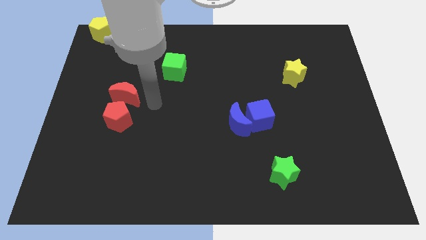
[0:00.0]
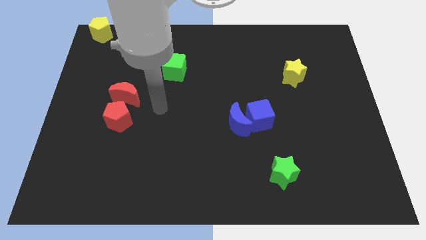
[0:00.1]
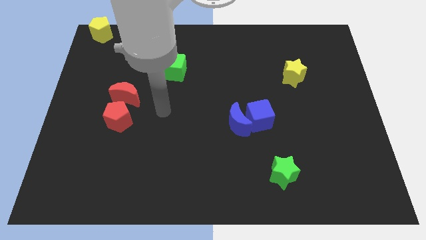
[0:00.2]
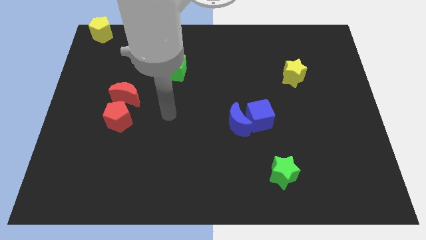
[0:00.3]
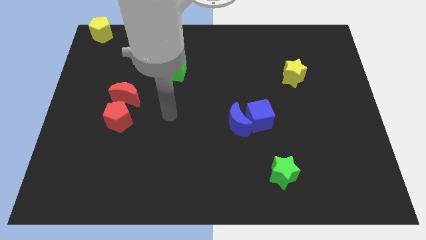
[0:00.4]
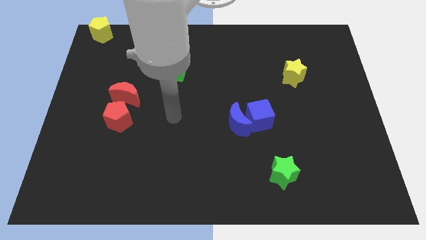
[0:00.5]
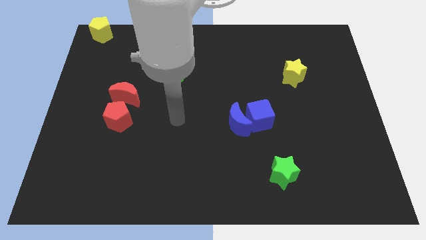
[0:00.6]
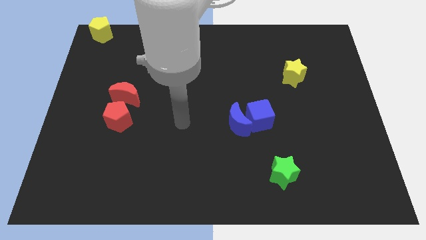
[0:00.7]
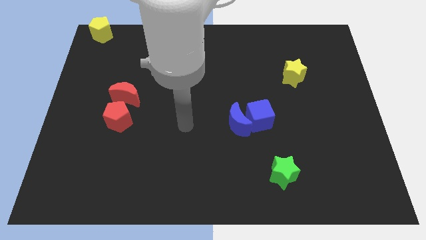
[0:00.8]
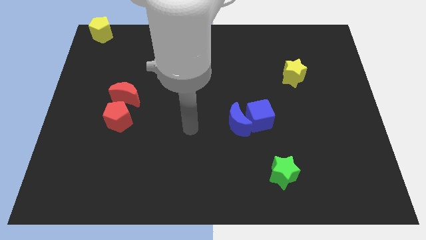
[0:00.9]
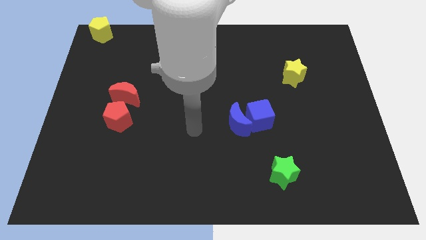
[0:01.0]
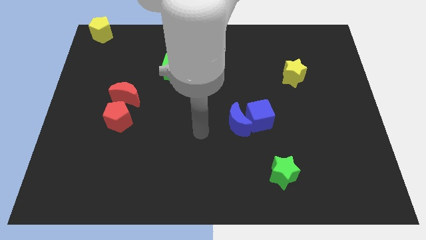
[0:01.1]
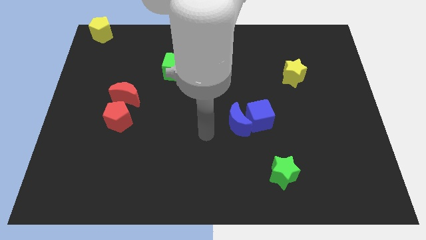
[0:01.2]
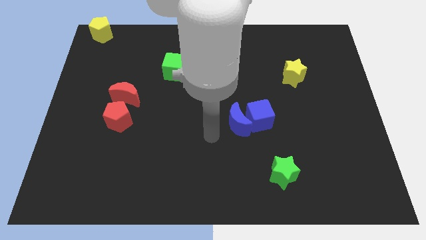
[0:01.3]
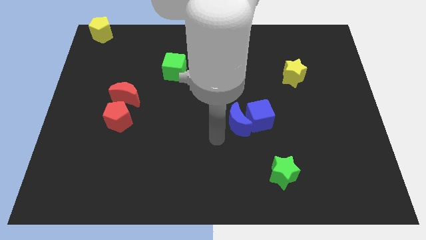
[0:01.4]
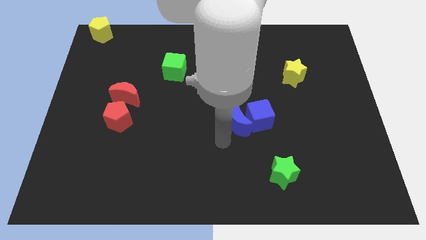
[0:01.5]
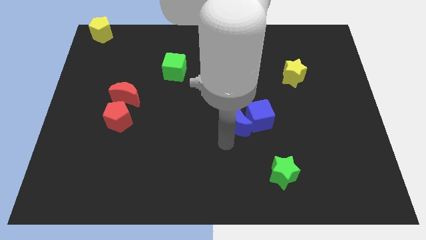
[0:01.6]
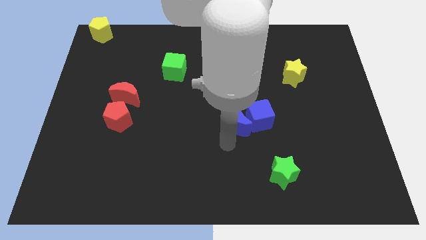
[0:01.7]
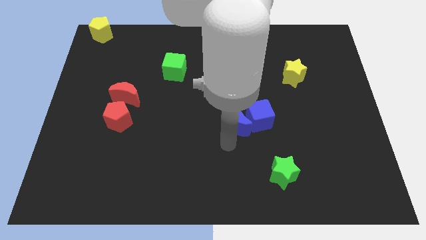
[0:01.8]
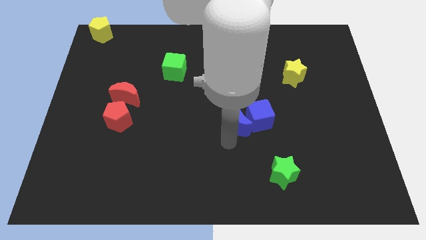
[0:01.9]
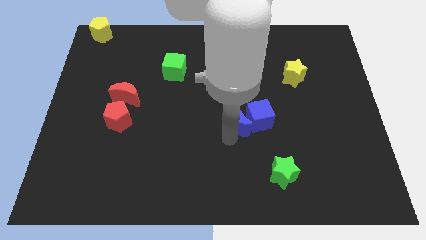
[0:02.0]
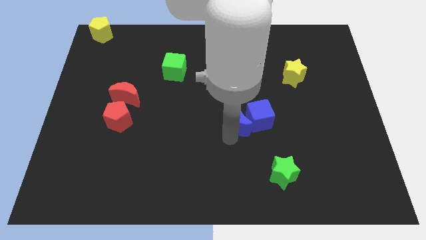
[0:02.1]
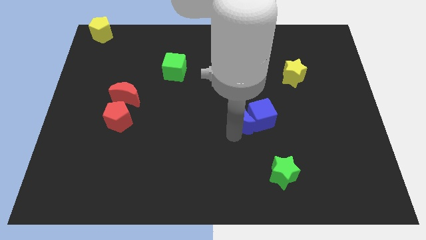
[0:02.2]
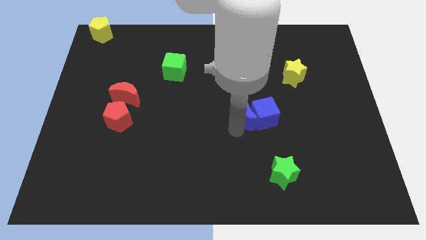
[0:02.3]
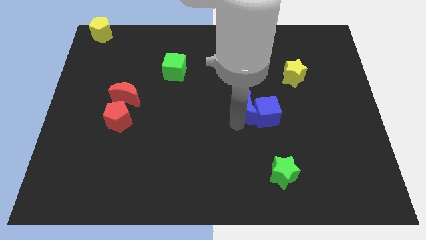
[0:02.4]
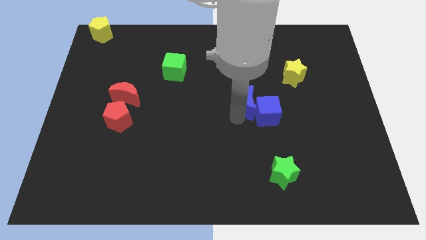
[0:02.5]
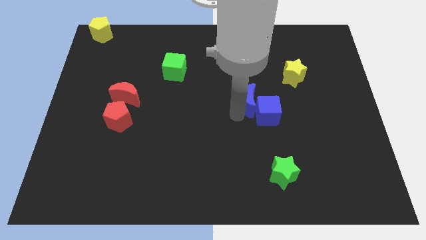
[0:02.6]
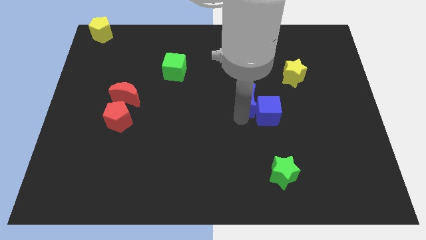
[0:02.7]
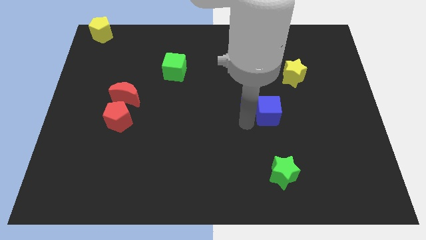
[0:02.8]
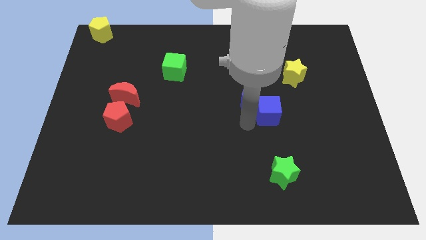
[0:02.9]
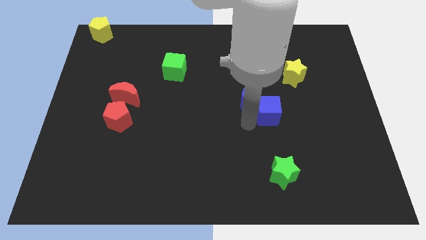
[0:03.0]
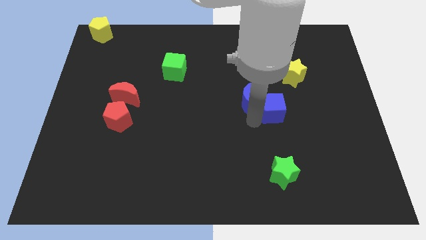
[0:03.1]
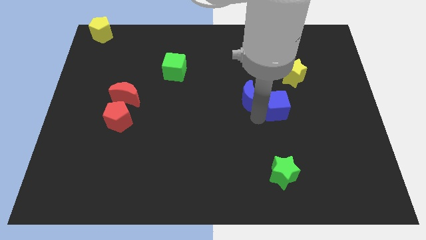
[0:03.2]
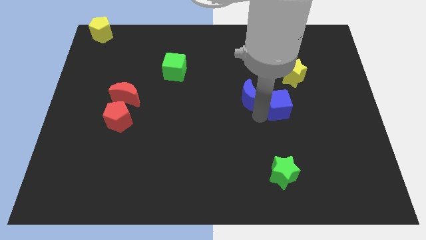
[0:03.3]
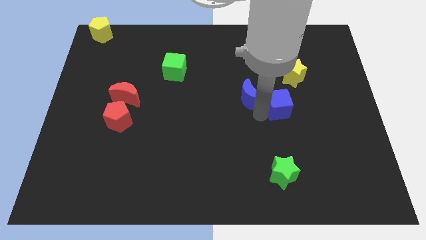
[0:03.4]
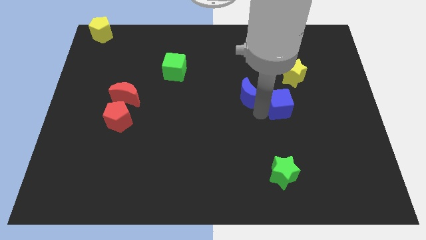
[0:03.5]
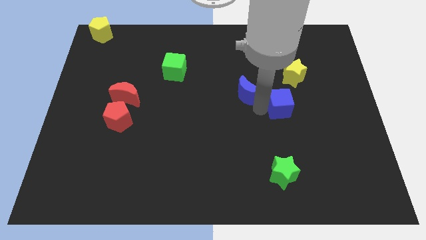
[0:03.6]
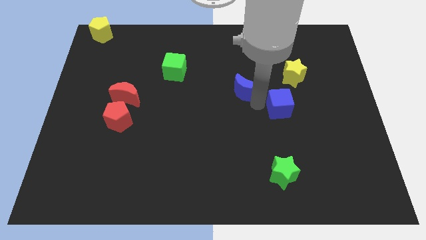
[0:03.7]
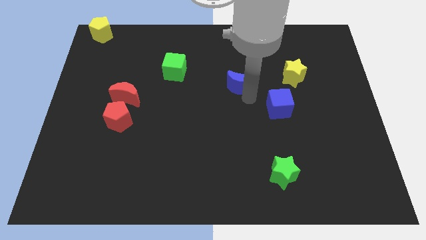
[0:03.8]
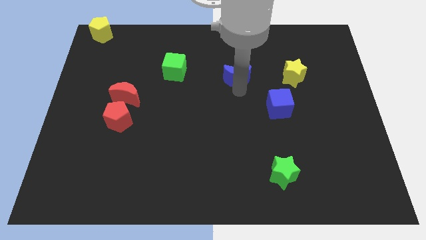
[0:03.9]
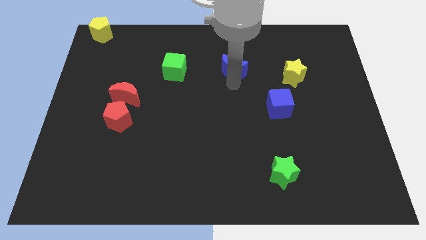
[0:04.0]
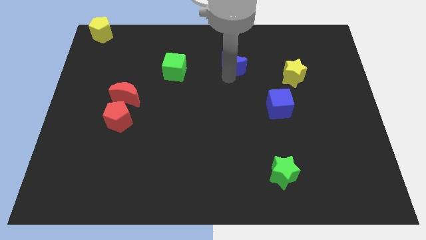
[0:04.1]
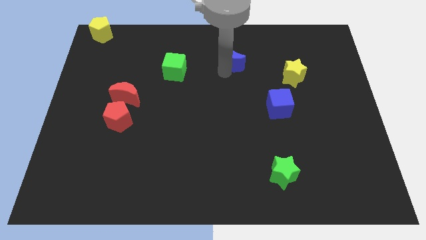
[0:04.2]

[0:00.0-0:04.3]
move the blue crescent to the right of the green cube

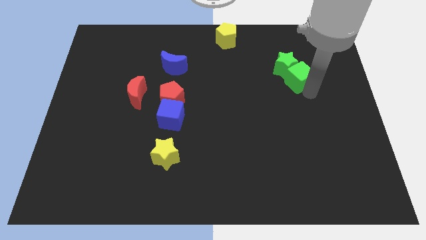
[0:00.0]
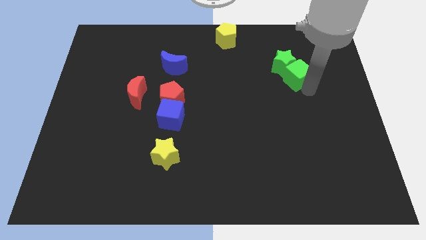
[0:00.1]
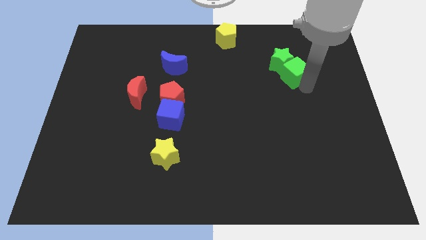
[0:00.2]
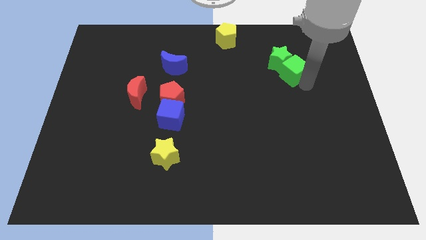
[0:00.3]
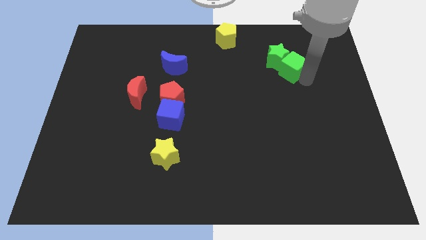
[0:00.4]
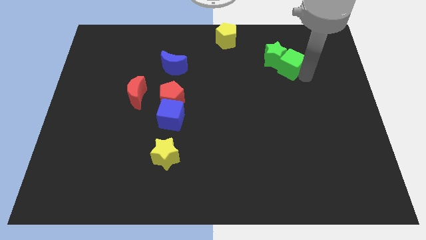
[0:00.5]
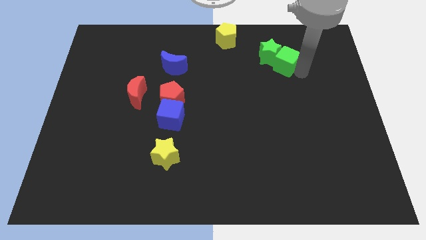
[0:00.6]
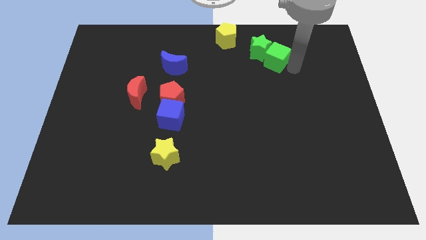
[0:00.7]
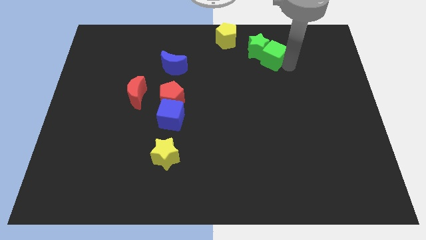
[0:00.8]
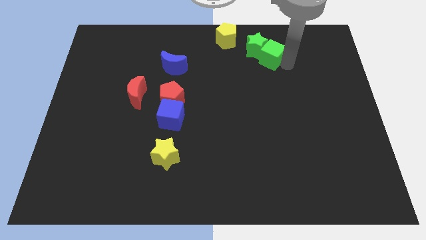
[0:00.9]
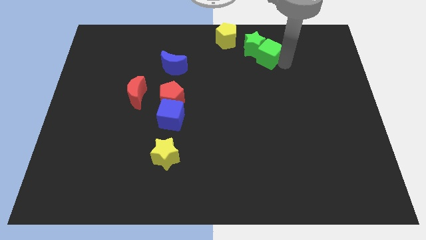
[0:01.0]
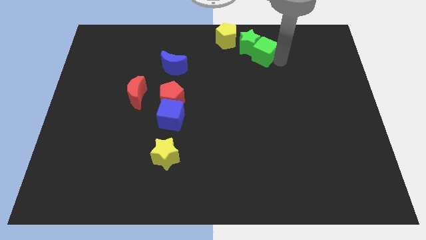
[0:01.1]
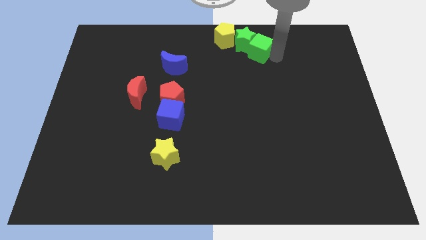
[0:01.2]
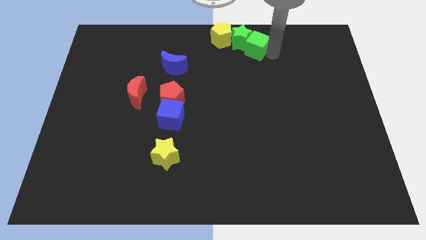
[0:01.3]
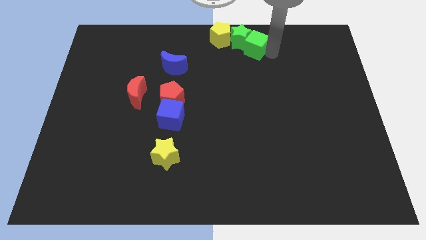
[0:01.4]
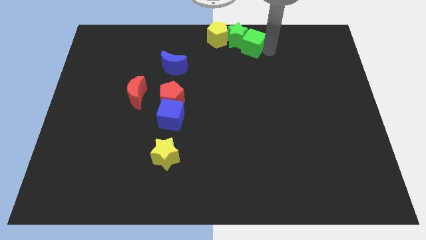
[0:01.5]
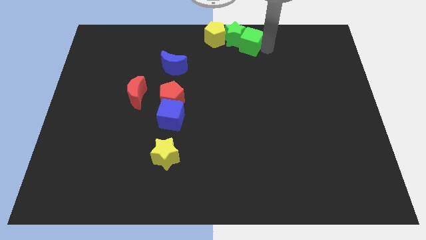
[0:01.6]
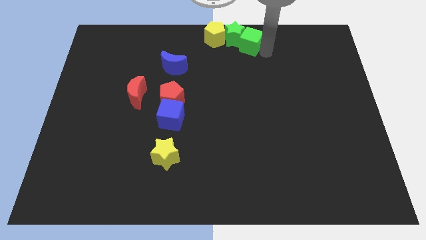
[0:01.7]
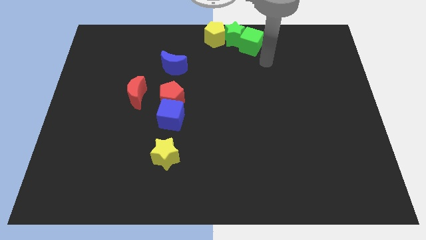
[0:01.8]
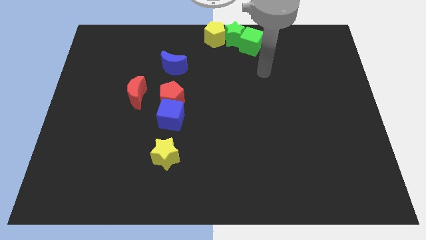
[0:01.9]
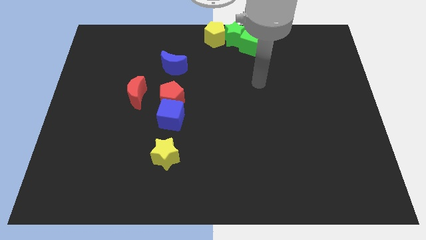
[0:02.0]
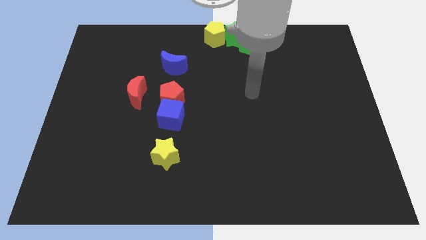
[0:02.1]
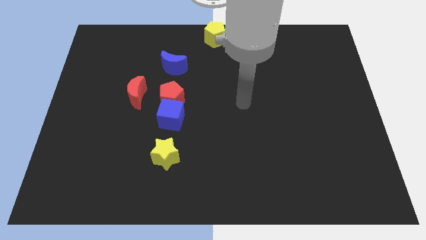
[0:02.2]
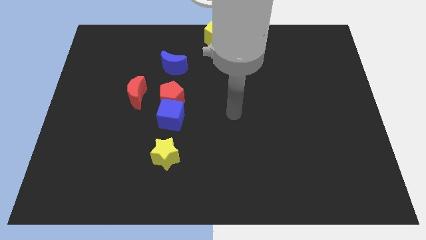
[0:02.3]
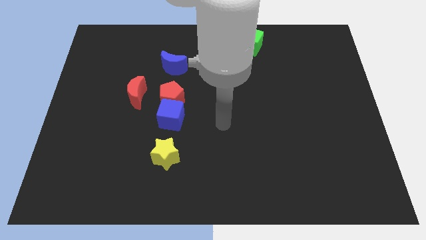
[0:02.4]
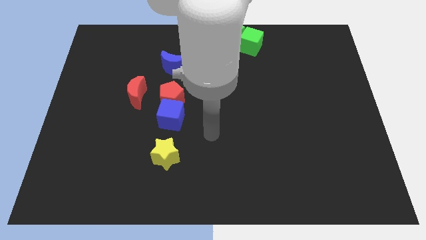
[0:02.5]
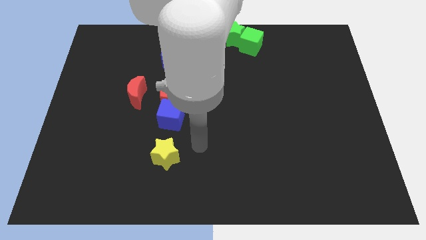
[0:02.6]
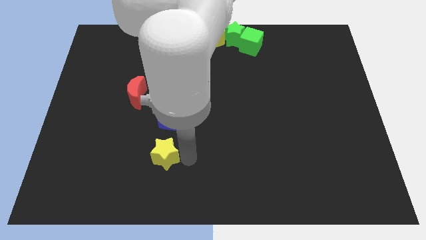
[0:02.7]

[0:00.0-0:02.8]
put the green blocks at the top center of the board

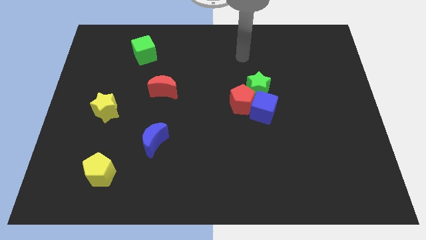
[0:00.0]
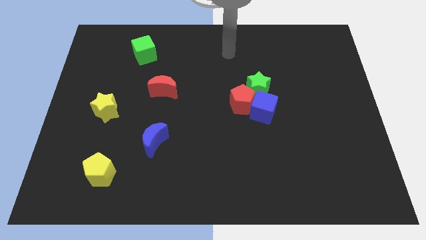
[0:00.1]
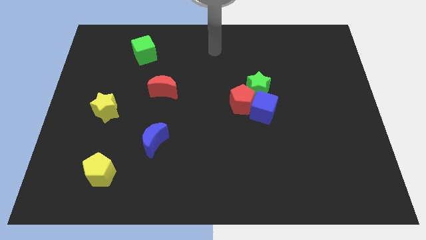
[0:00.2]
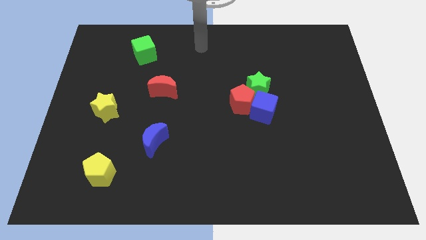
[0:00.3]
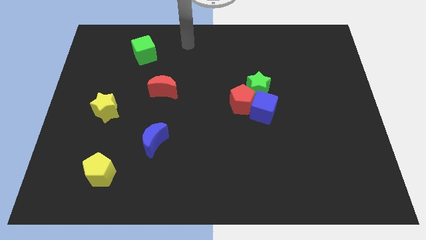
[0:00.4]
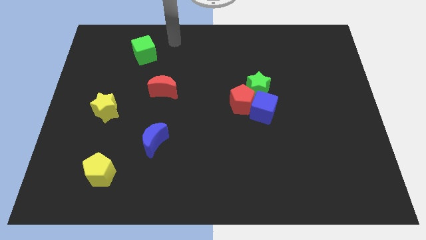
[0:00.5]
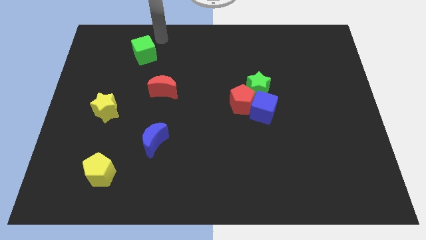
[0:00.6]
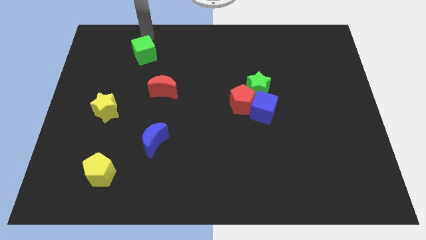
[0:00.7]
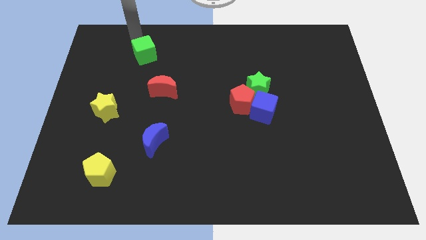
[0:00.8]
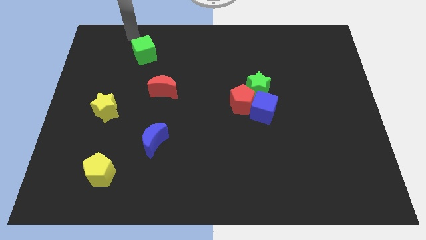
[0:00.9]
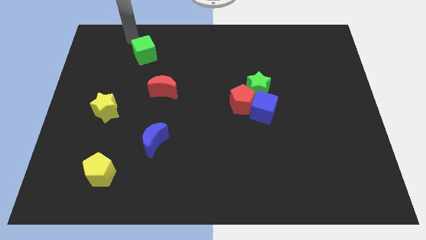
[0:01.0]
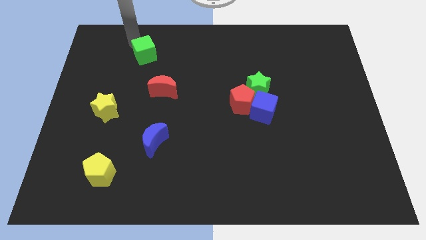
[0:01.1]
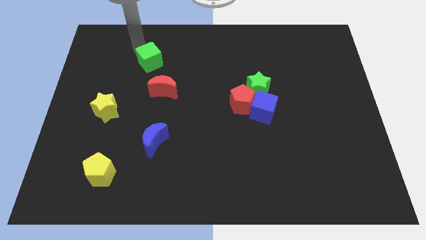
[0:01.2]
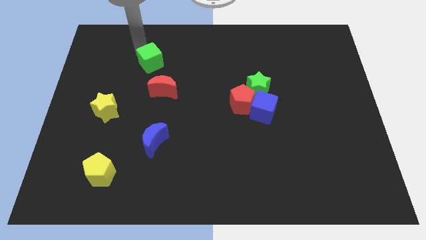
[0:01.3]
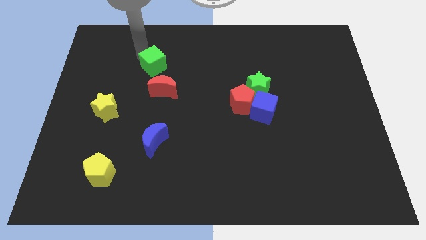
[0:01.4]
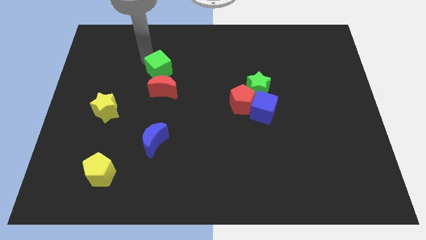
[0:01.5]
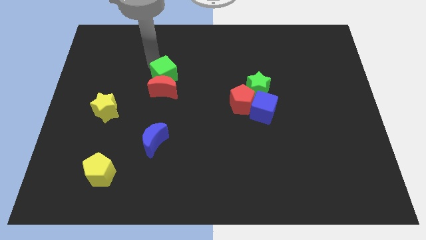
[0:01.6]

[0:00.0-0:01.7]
push the green cube above red moon

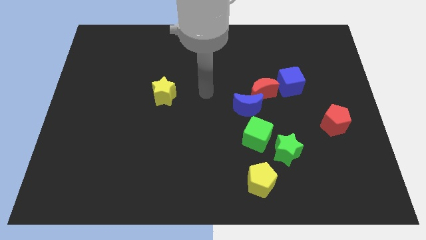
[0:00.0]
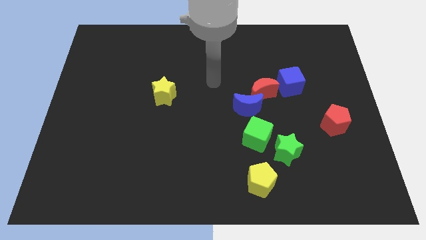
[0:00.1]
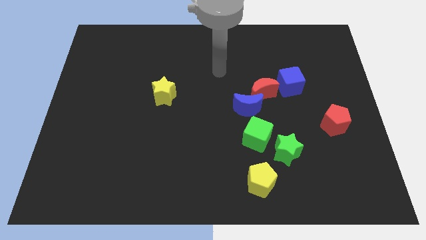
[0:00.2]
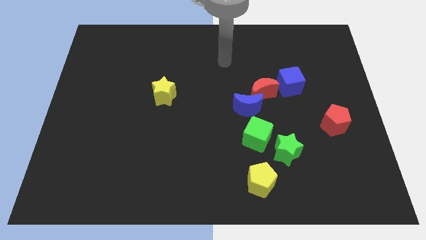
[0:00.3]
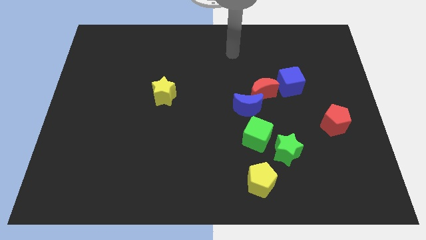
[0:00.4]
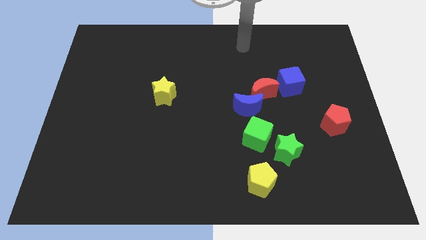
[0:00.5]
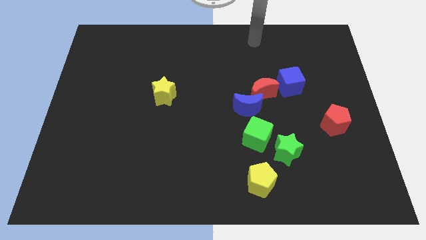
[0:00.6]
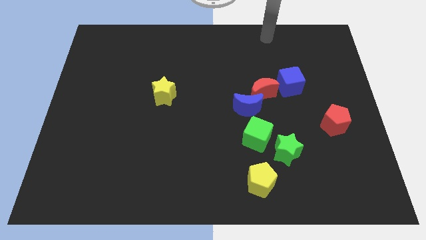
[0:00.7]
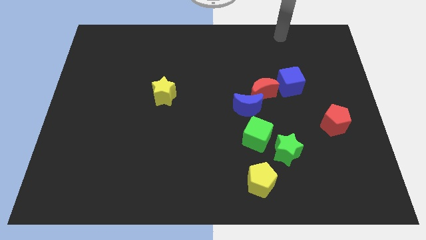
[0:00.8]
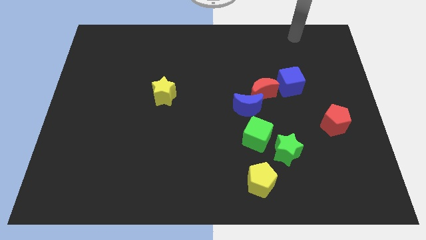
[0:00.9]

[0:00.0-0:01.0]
move your arm to the top right side of the board
